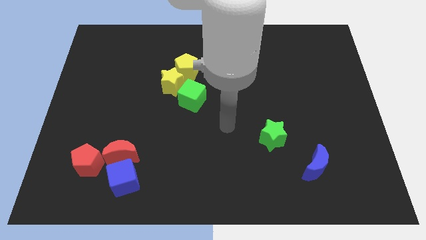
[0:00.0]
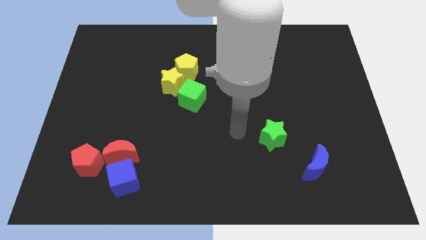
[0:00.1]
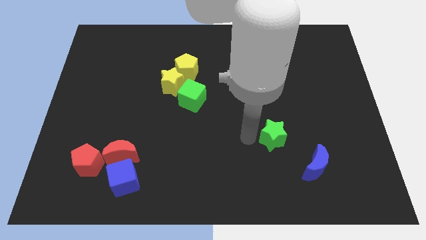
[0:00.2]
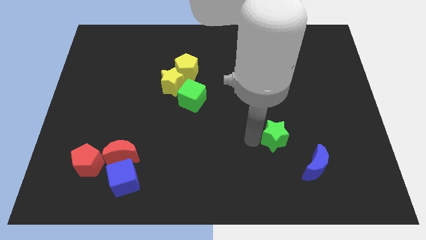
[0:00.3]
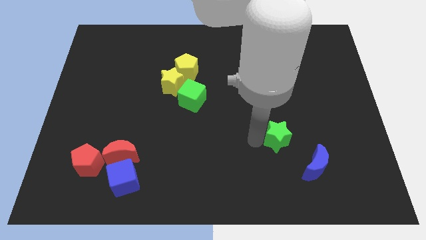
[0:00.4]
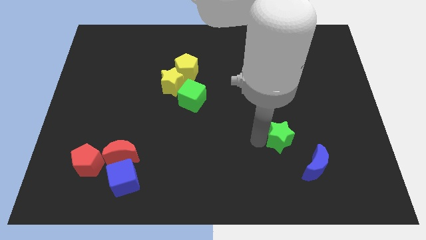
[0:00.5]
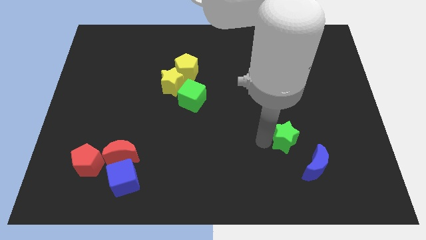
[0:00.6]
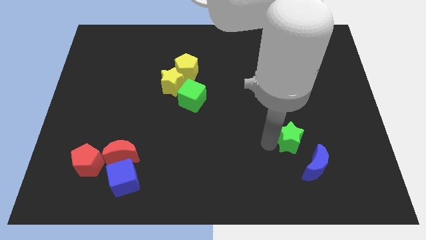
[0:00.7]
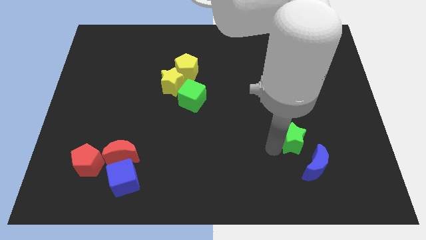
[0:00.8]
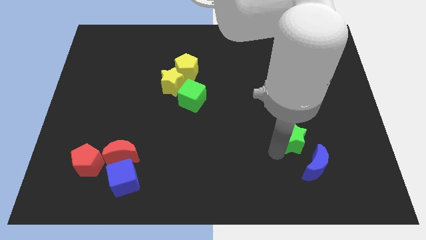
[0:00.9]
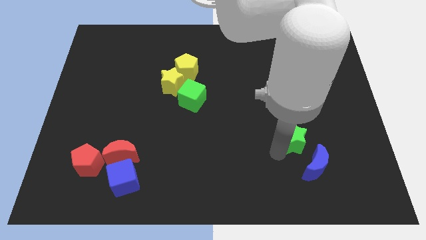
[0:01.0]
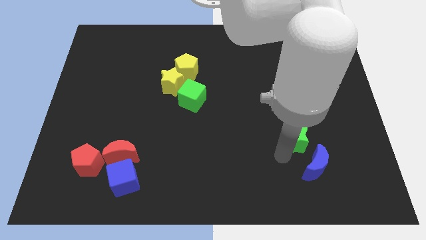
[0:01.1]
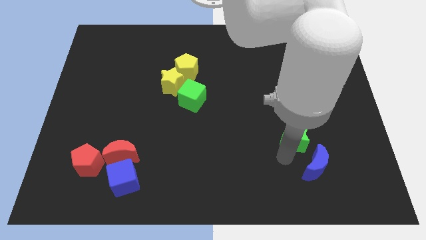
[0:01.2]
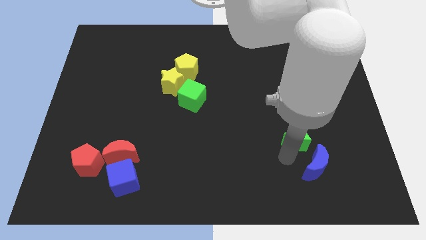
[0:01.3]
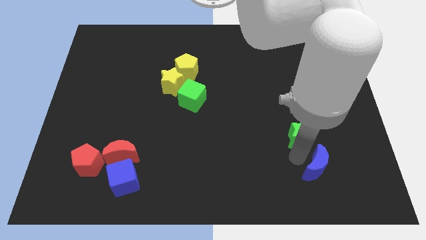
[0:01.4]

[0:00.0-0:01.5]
place green star to the top of blue moon

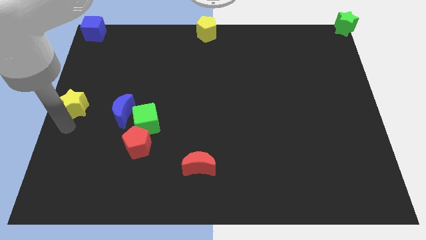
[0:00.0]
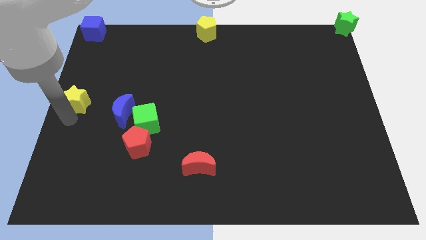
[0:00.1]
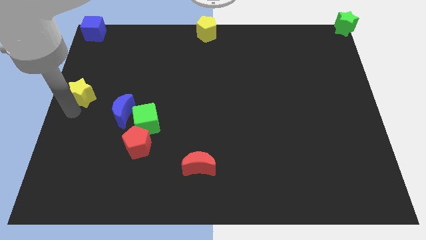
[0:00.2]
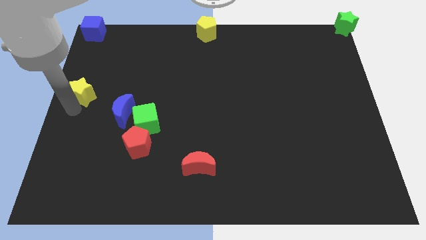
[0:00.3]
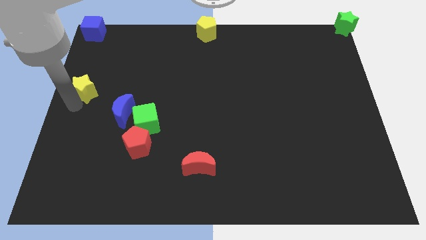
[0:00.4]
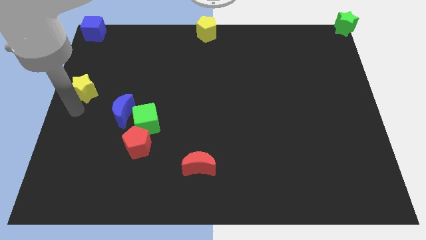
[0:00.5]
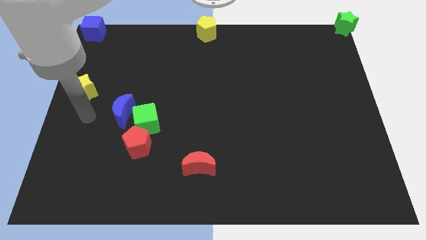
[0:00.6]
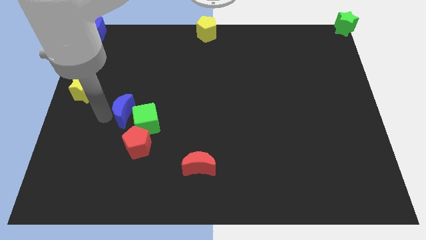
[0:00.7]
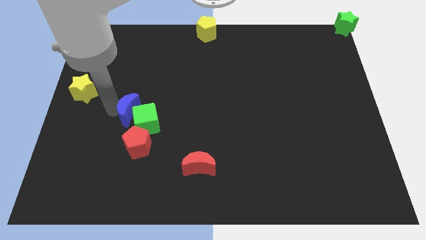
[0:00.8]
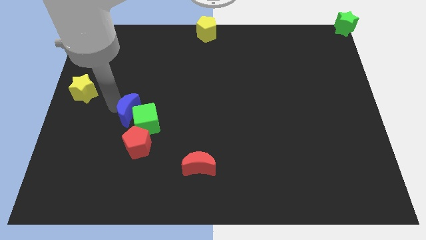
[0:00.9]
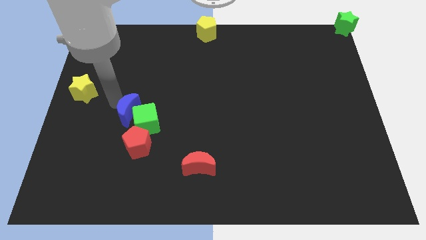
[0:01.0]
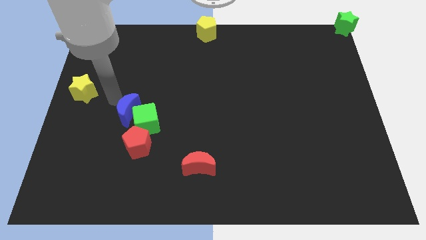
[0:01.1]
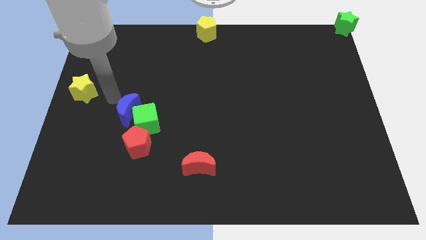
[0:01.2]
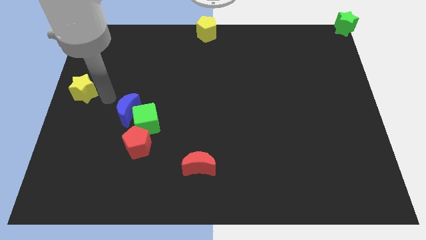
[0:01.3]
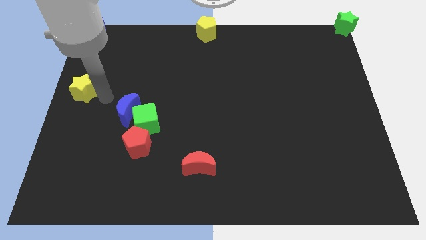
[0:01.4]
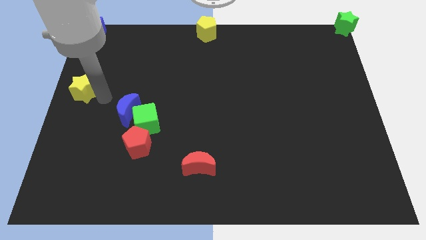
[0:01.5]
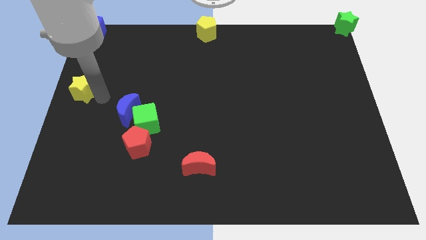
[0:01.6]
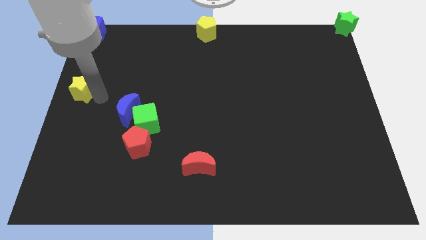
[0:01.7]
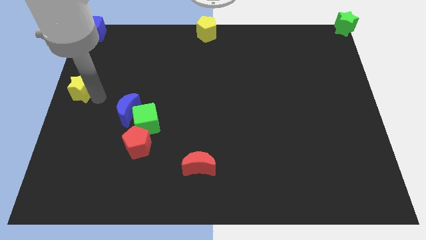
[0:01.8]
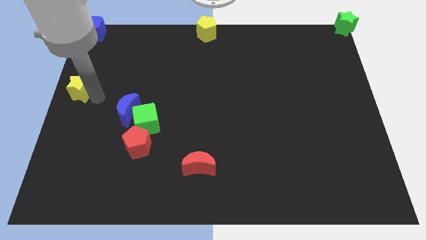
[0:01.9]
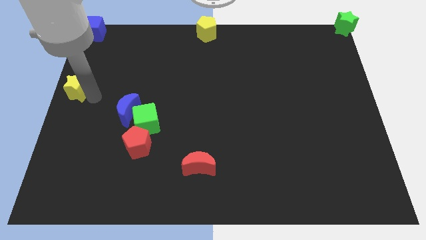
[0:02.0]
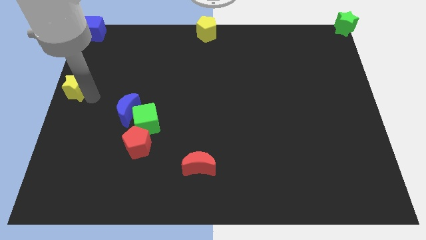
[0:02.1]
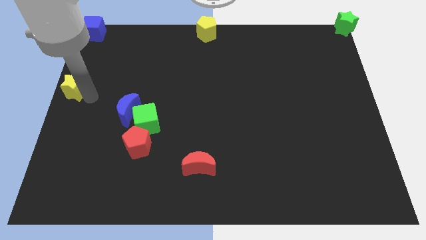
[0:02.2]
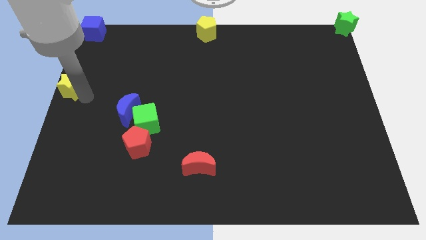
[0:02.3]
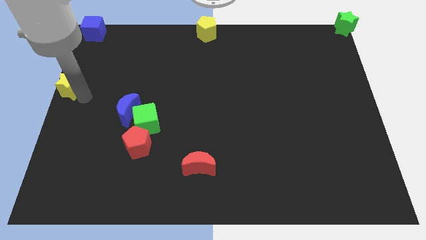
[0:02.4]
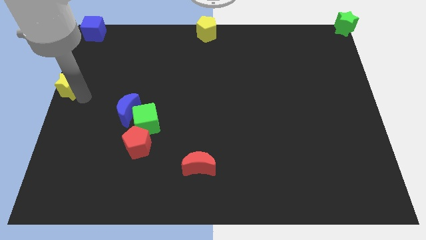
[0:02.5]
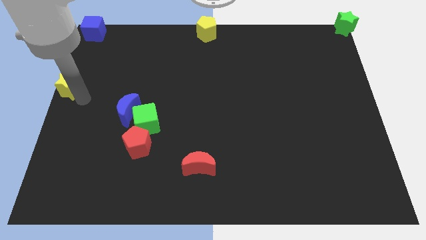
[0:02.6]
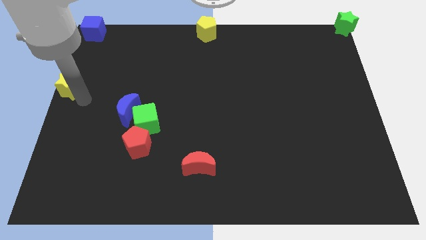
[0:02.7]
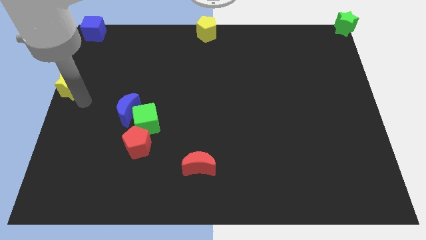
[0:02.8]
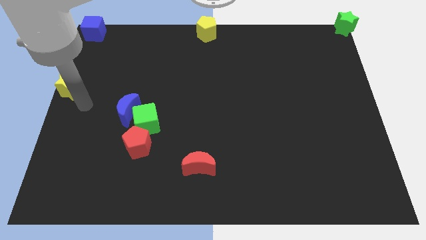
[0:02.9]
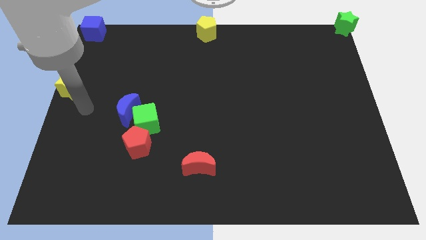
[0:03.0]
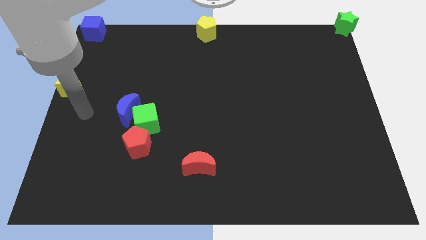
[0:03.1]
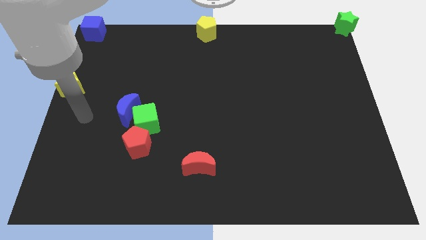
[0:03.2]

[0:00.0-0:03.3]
place the yellow star underneath the blue cube

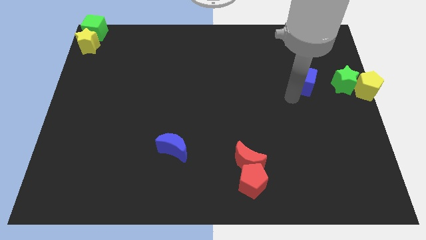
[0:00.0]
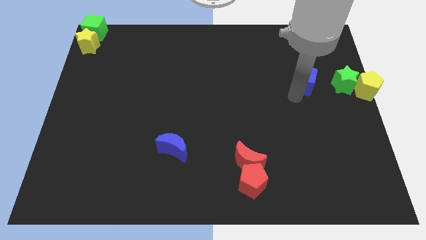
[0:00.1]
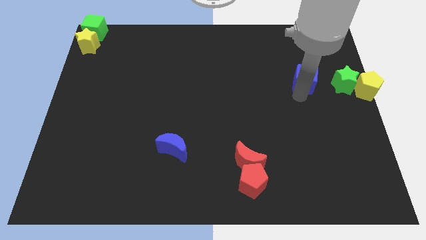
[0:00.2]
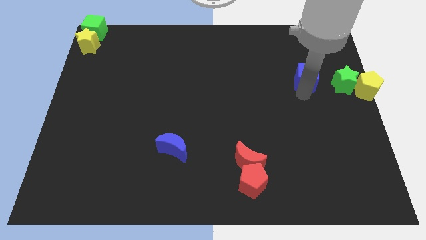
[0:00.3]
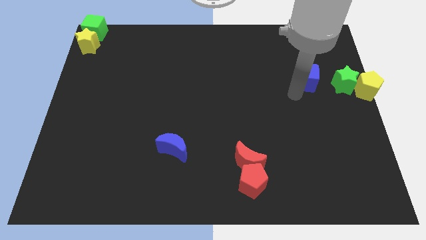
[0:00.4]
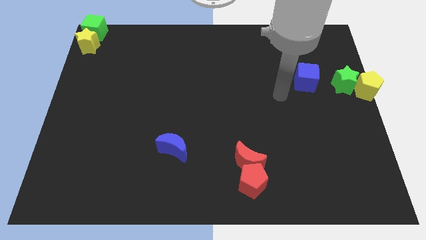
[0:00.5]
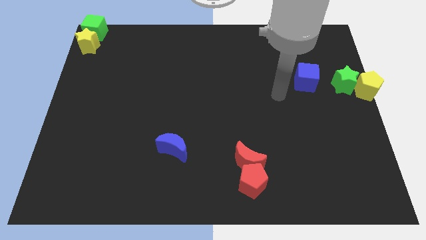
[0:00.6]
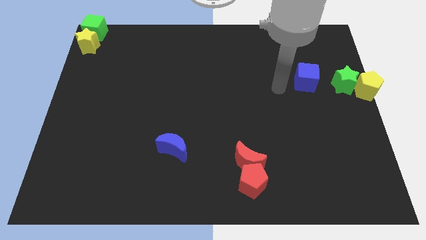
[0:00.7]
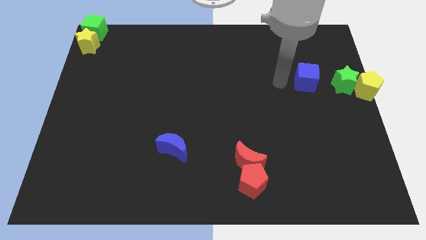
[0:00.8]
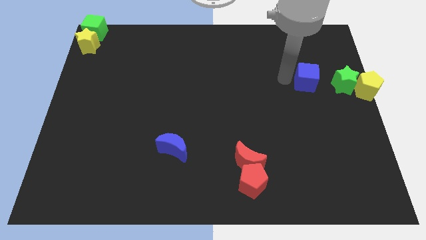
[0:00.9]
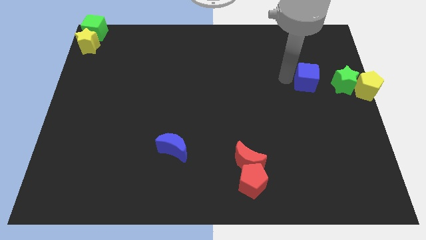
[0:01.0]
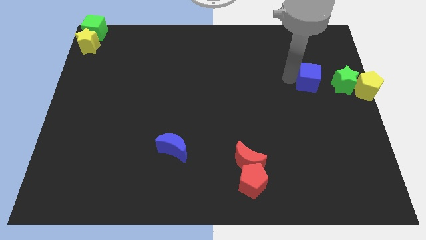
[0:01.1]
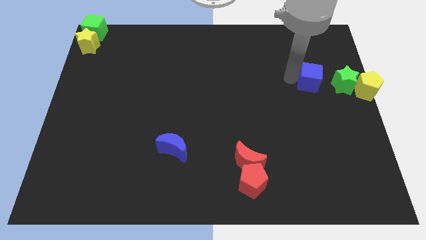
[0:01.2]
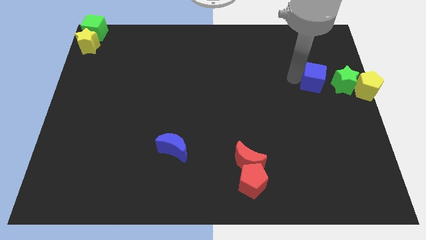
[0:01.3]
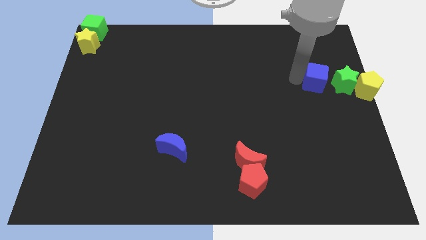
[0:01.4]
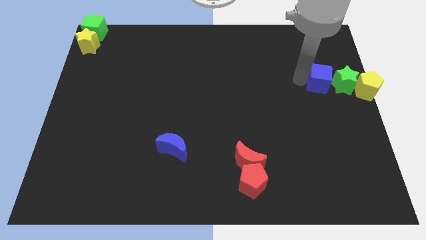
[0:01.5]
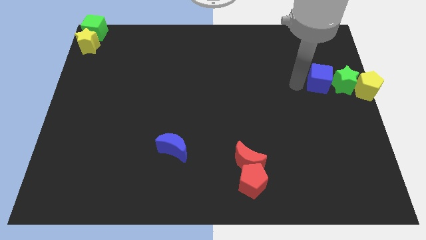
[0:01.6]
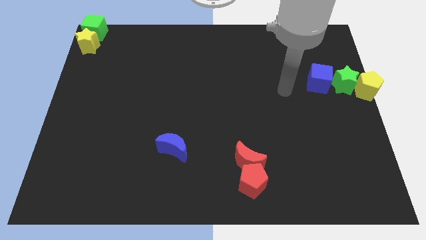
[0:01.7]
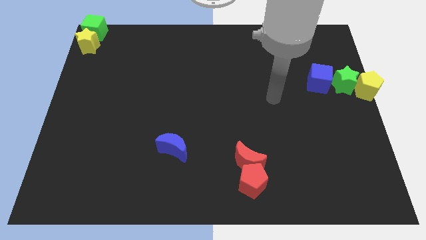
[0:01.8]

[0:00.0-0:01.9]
place the blue cube beside the green star to the left

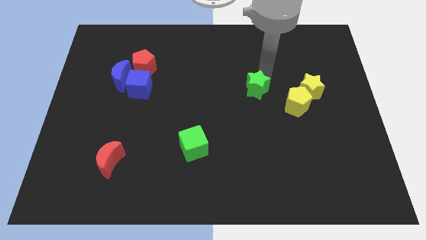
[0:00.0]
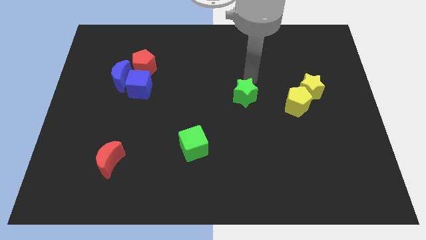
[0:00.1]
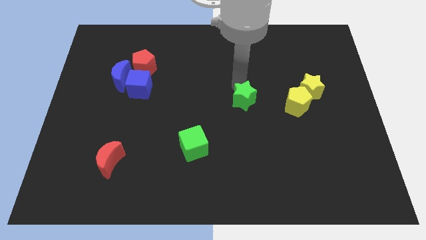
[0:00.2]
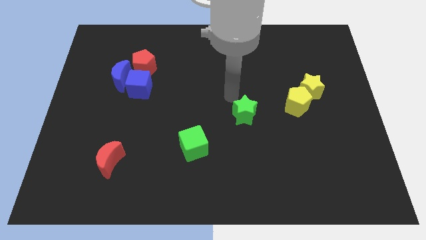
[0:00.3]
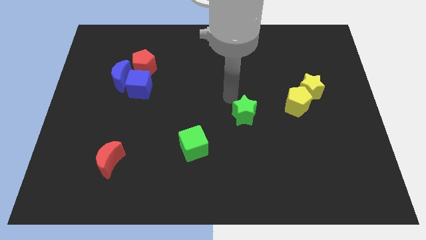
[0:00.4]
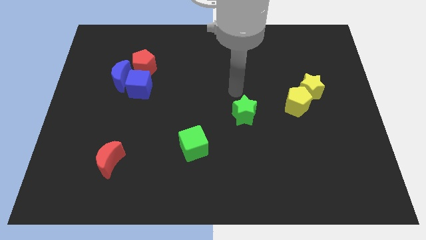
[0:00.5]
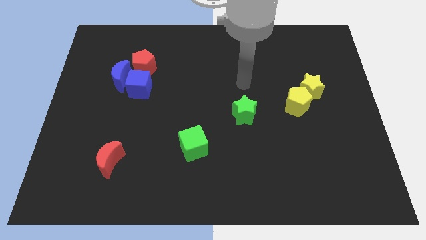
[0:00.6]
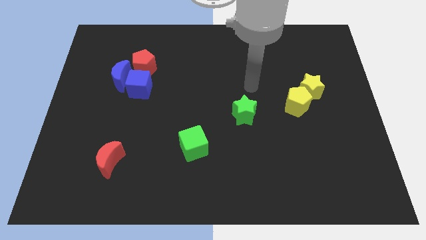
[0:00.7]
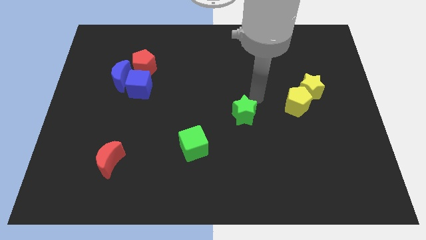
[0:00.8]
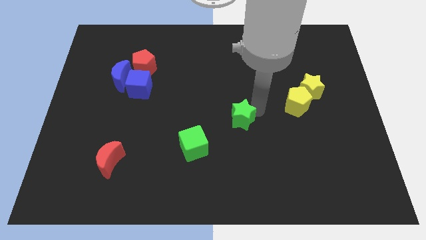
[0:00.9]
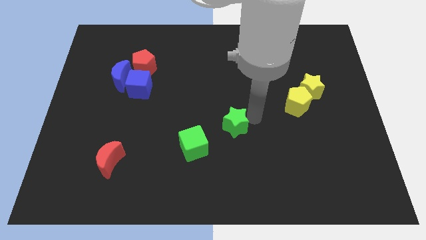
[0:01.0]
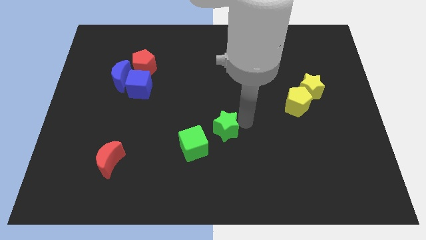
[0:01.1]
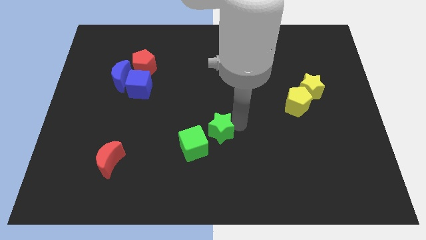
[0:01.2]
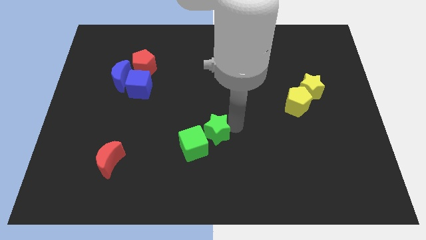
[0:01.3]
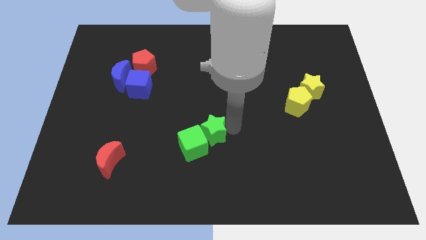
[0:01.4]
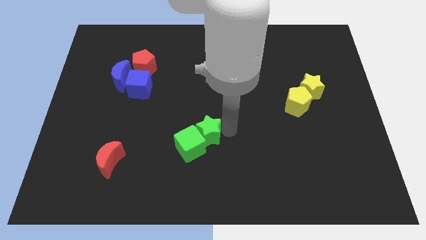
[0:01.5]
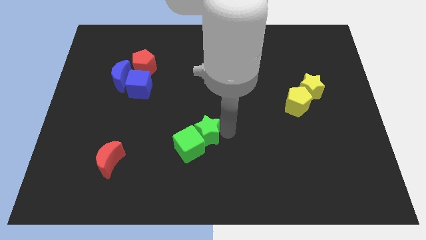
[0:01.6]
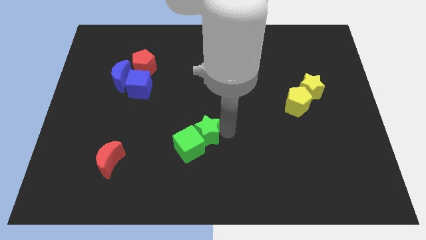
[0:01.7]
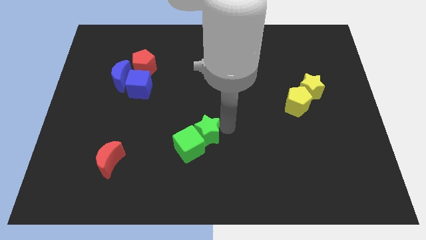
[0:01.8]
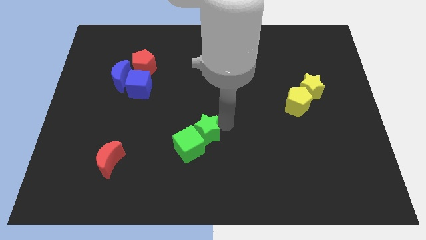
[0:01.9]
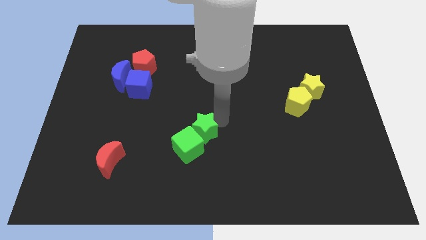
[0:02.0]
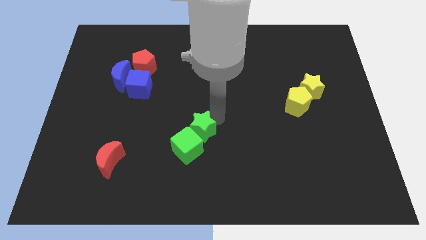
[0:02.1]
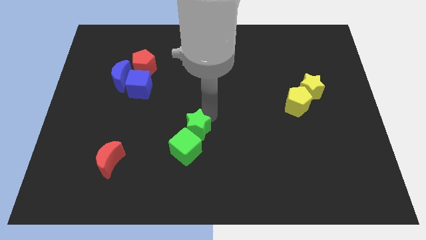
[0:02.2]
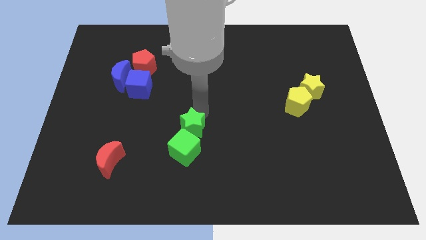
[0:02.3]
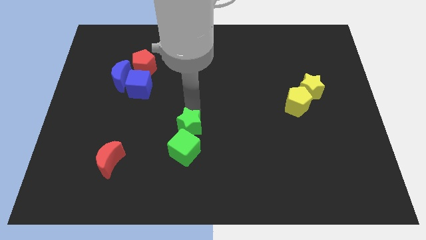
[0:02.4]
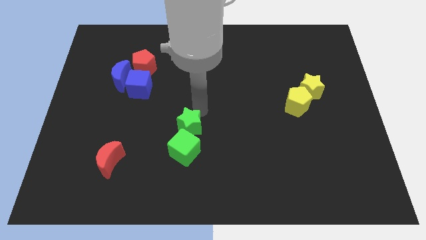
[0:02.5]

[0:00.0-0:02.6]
move the green star towards the top of green cube
